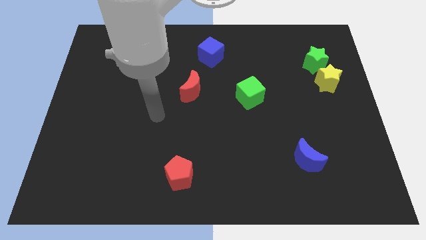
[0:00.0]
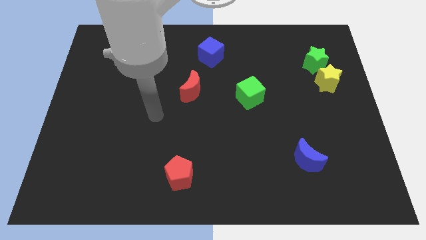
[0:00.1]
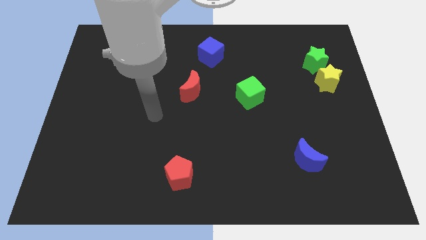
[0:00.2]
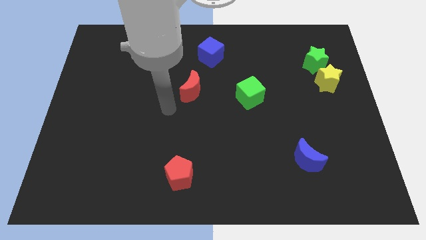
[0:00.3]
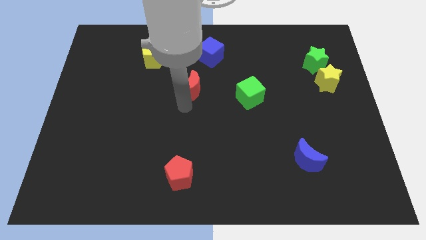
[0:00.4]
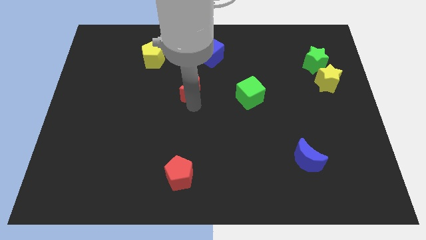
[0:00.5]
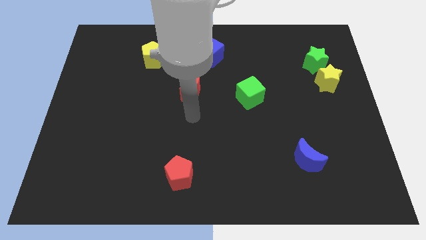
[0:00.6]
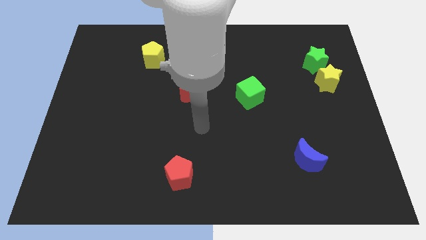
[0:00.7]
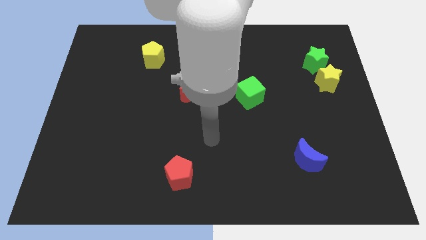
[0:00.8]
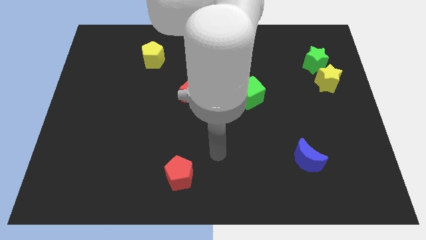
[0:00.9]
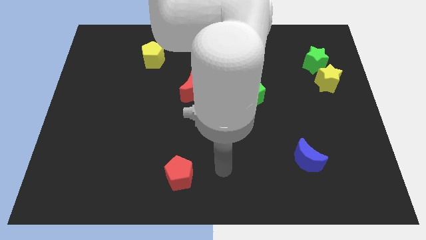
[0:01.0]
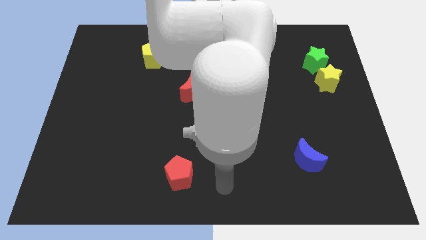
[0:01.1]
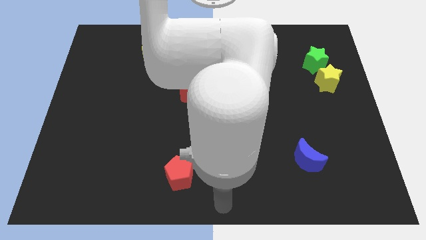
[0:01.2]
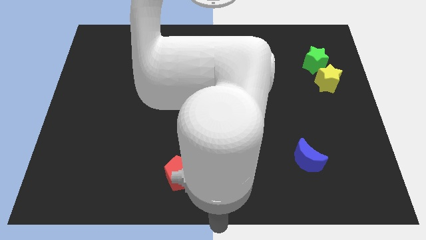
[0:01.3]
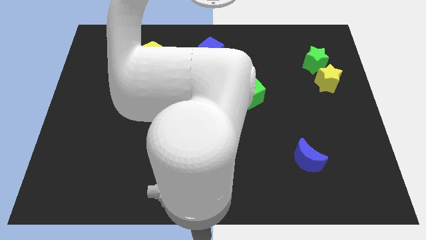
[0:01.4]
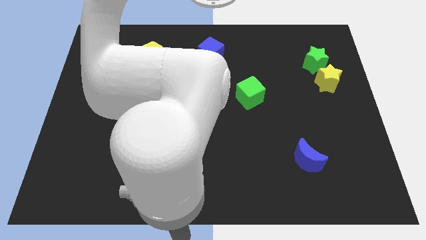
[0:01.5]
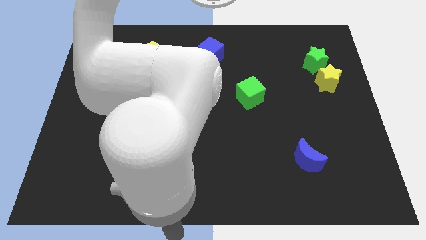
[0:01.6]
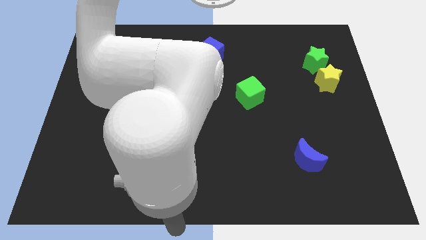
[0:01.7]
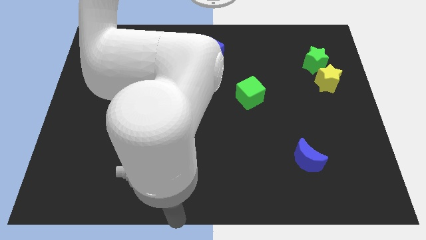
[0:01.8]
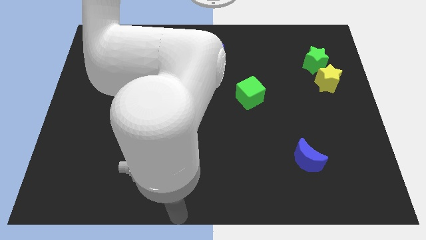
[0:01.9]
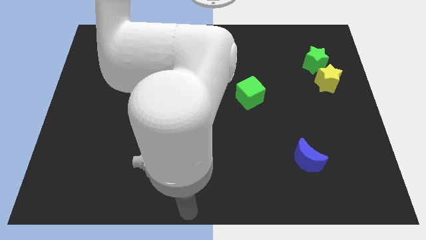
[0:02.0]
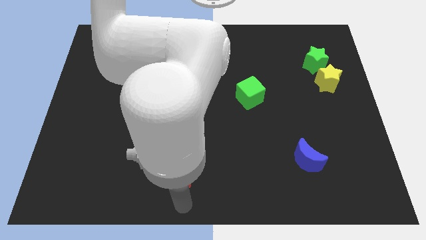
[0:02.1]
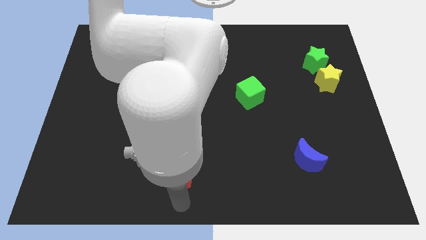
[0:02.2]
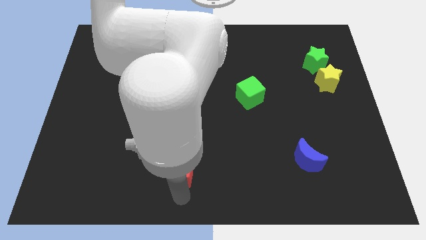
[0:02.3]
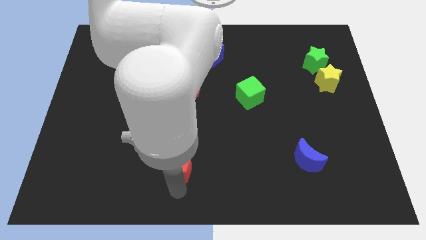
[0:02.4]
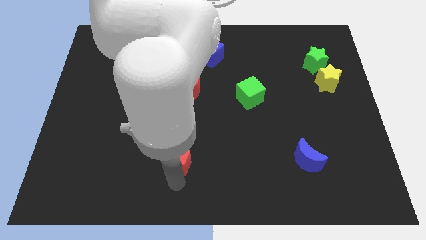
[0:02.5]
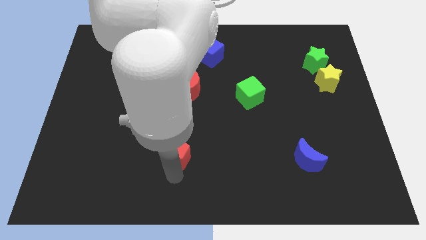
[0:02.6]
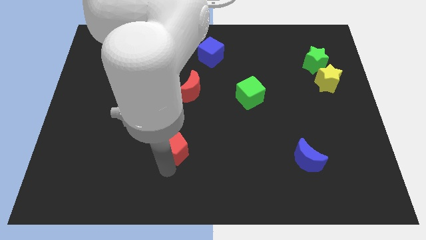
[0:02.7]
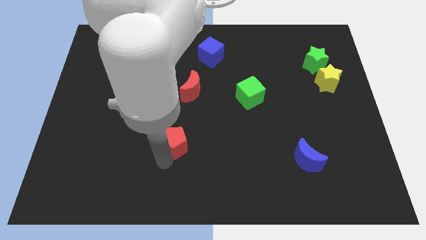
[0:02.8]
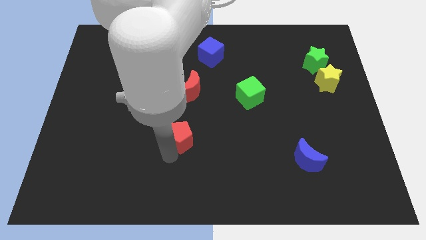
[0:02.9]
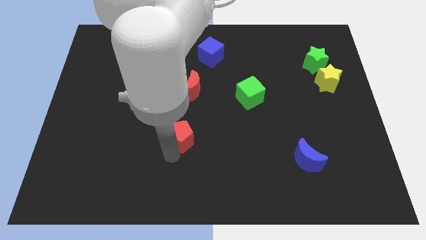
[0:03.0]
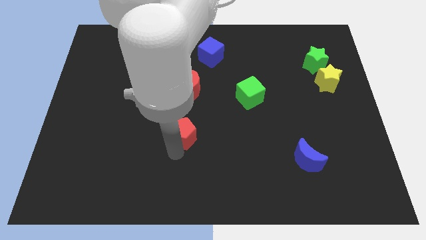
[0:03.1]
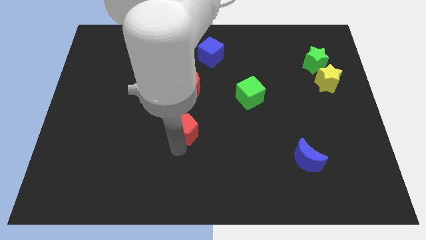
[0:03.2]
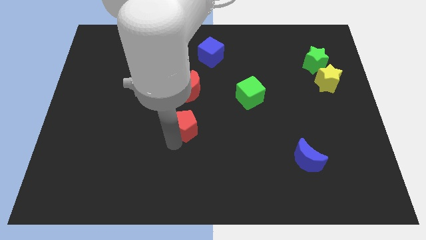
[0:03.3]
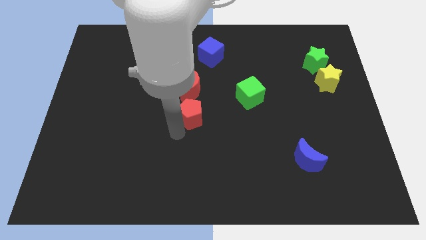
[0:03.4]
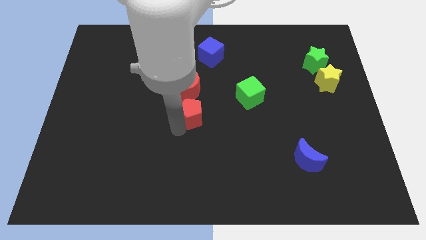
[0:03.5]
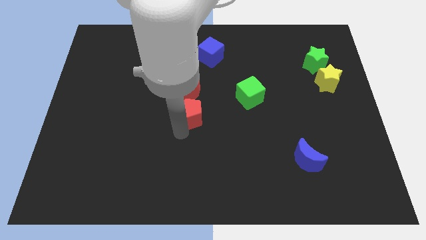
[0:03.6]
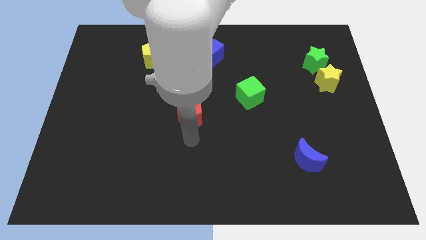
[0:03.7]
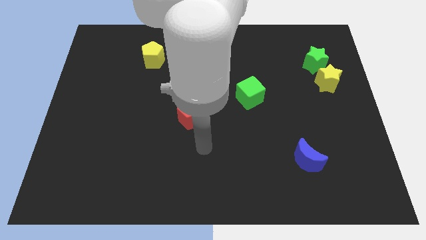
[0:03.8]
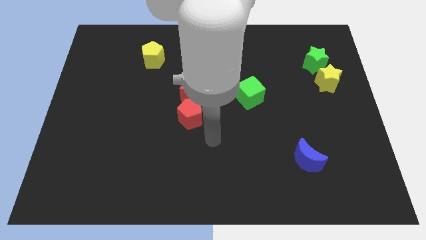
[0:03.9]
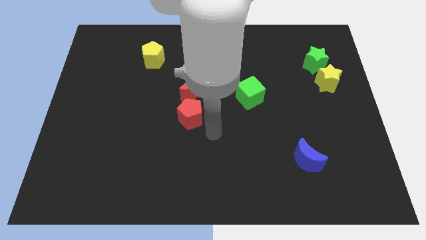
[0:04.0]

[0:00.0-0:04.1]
drag the red pentagon diagonally top left to the blue moon

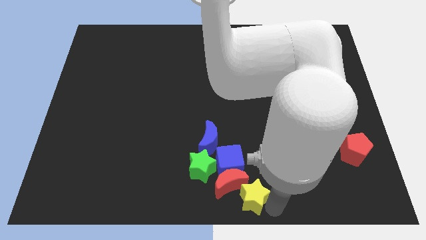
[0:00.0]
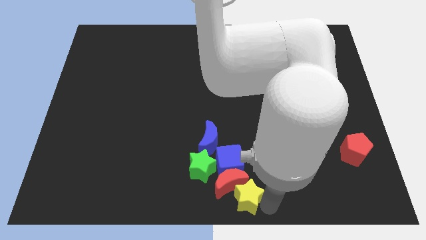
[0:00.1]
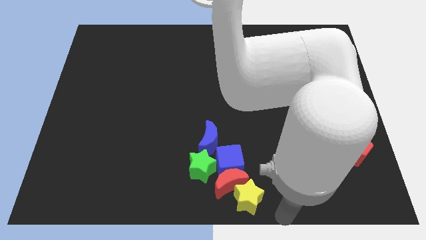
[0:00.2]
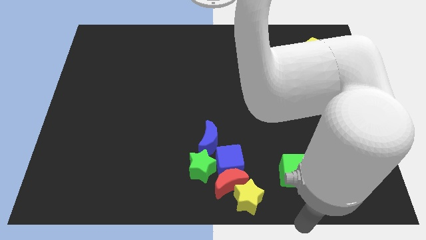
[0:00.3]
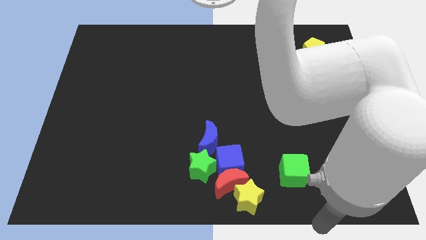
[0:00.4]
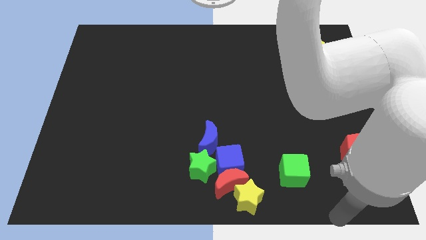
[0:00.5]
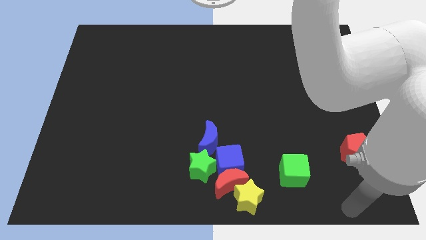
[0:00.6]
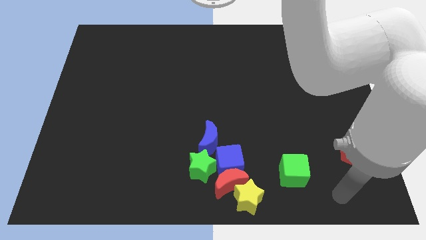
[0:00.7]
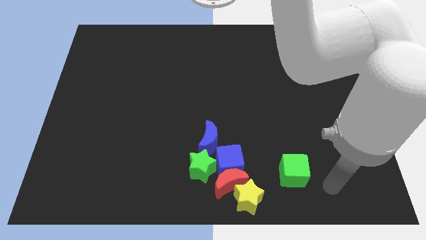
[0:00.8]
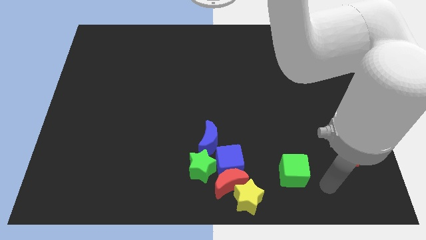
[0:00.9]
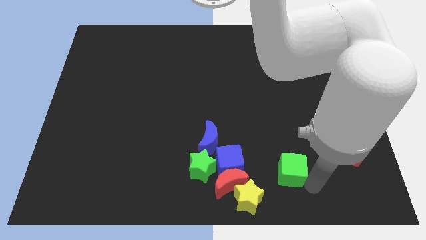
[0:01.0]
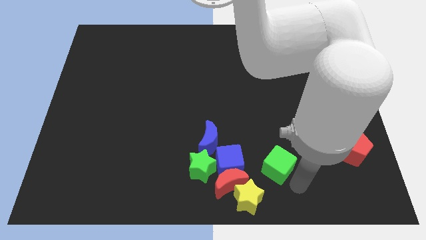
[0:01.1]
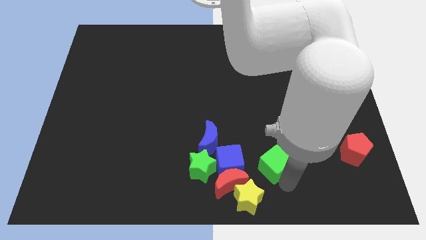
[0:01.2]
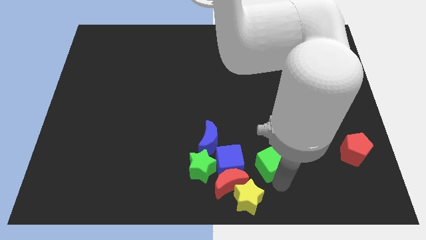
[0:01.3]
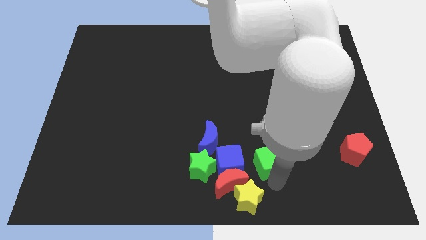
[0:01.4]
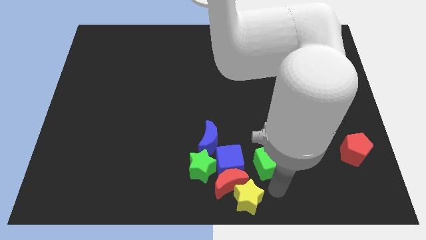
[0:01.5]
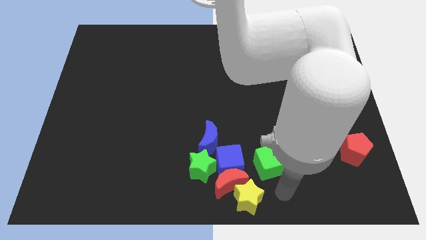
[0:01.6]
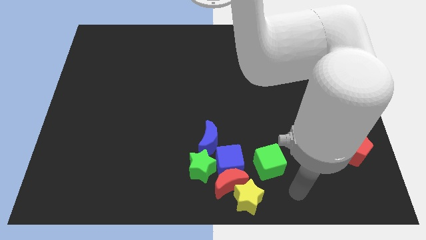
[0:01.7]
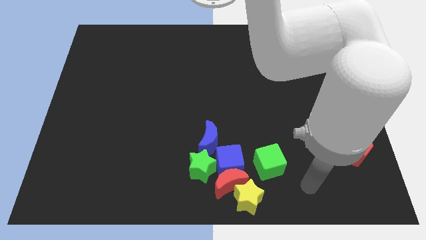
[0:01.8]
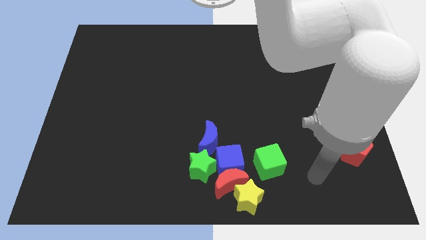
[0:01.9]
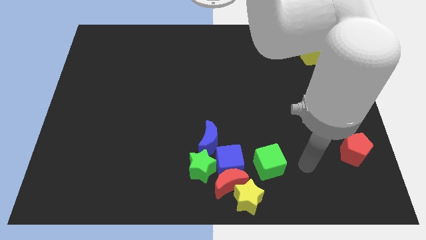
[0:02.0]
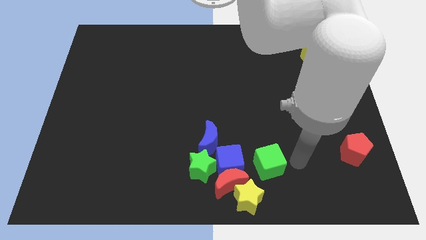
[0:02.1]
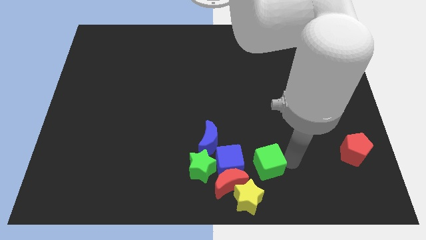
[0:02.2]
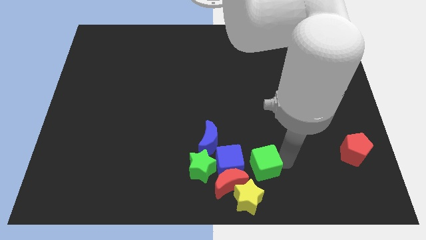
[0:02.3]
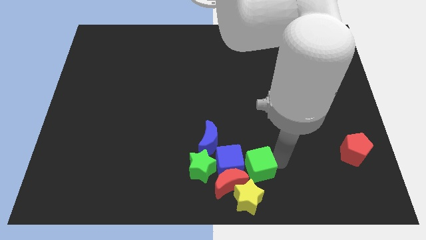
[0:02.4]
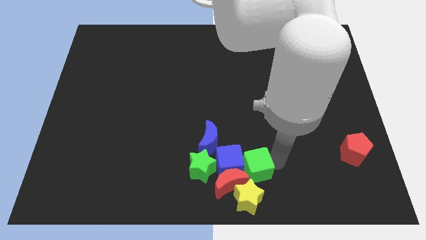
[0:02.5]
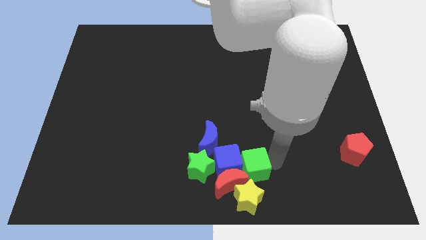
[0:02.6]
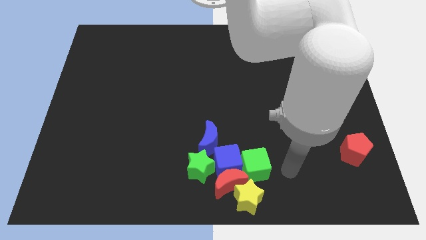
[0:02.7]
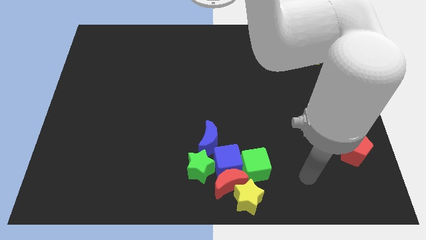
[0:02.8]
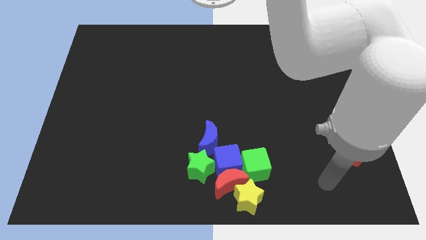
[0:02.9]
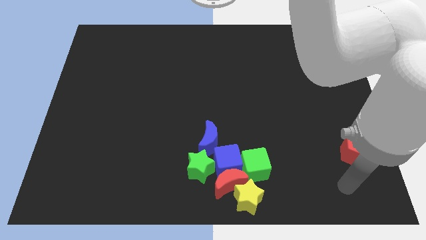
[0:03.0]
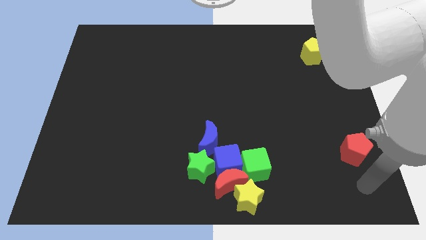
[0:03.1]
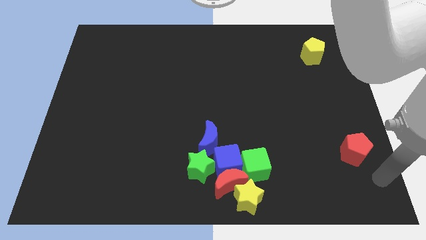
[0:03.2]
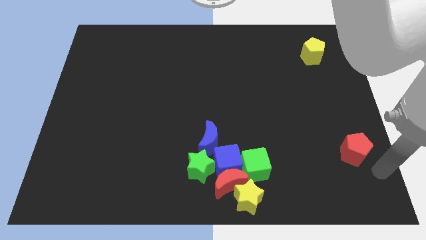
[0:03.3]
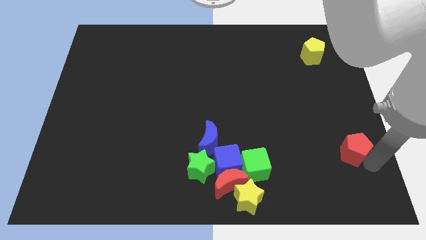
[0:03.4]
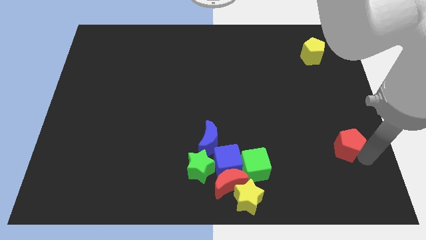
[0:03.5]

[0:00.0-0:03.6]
push the green cube into the group of blocks

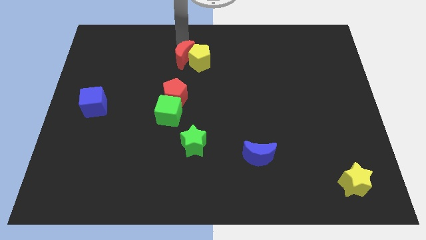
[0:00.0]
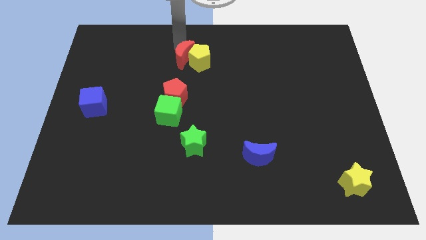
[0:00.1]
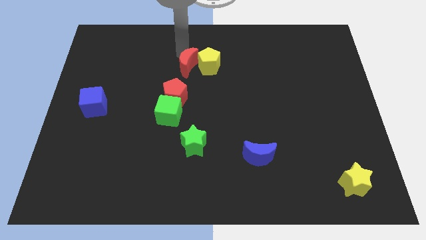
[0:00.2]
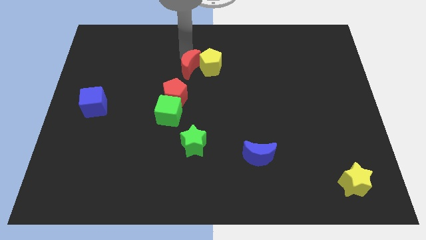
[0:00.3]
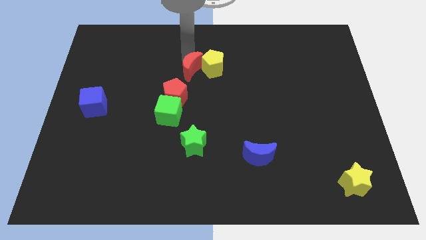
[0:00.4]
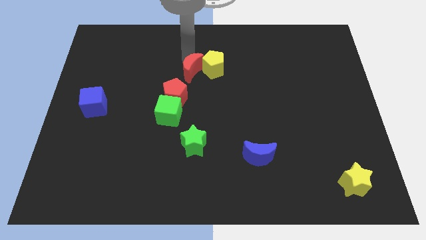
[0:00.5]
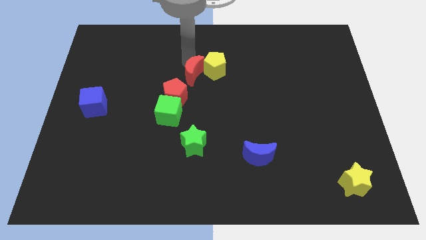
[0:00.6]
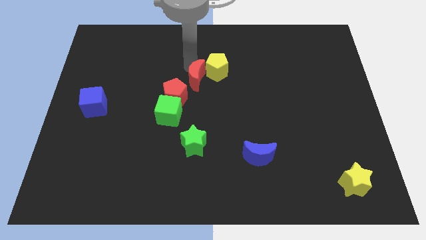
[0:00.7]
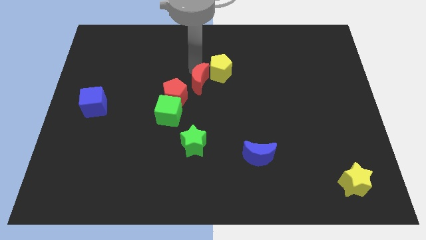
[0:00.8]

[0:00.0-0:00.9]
move red crescent diagonally

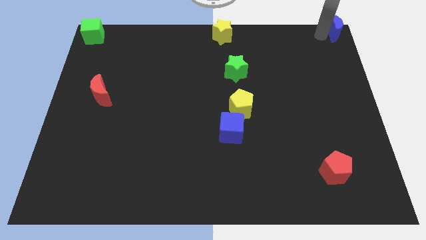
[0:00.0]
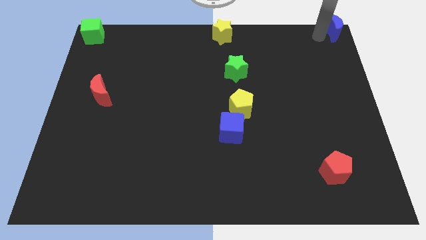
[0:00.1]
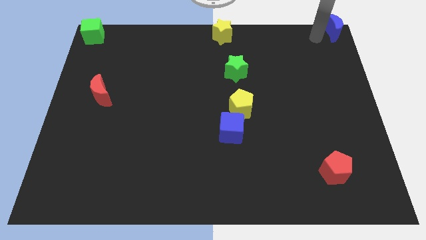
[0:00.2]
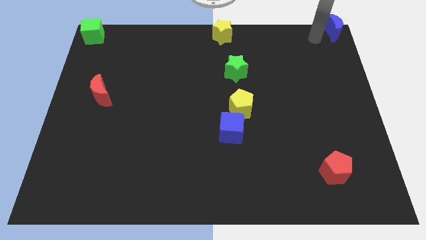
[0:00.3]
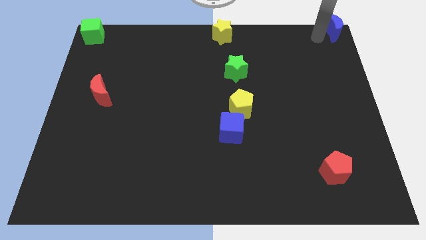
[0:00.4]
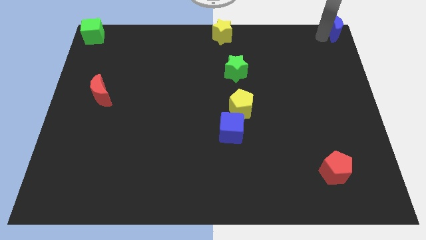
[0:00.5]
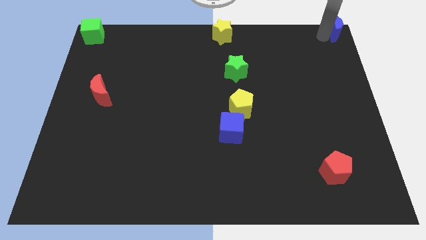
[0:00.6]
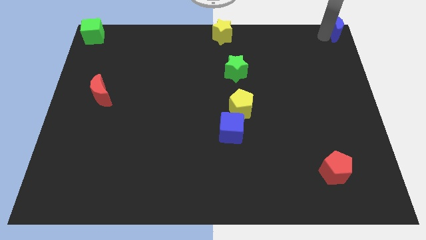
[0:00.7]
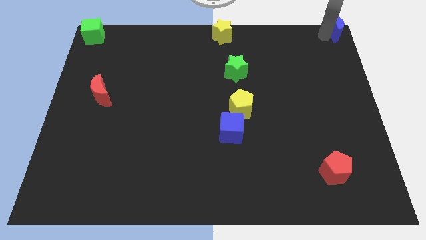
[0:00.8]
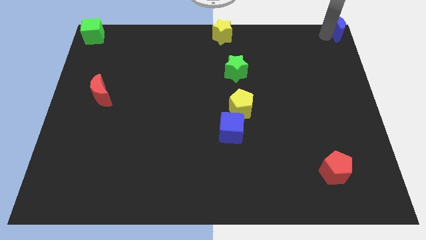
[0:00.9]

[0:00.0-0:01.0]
move the blue crescent to the top right corner of the board
